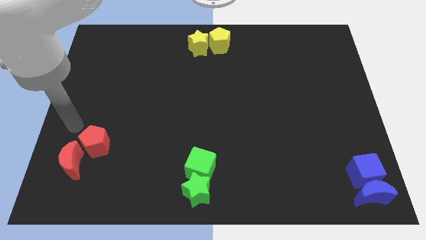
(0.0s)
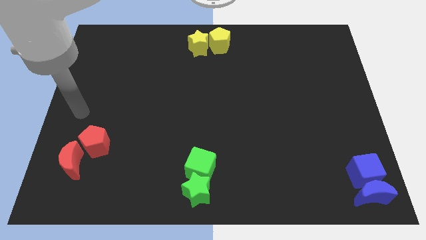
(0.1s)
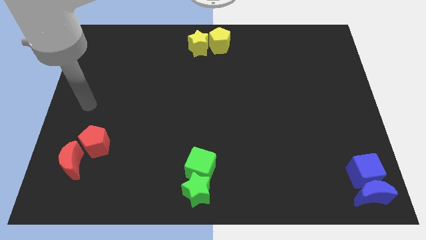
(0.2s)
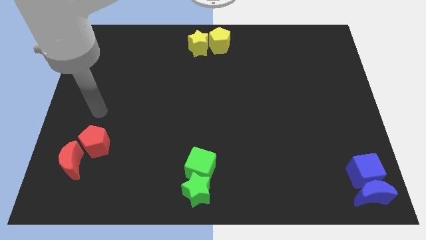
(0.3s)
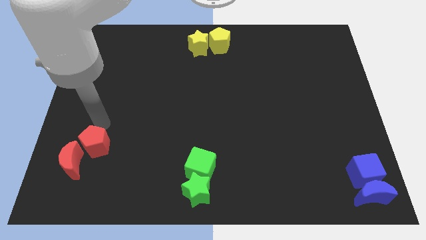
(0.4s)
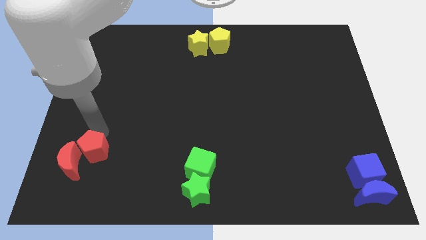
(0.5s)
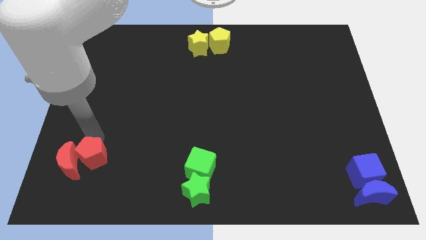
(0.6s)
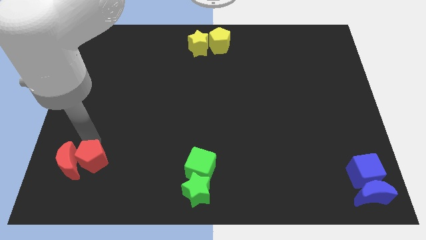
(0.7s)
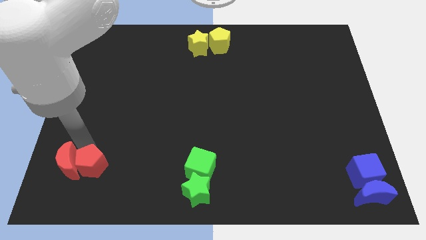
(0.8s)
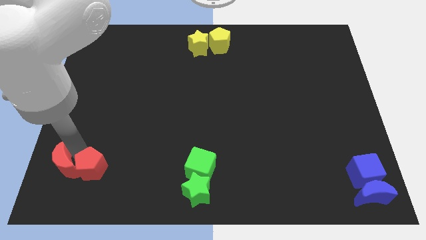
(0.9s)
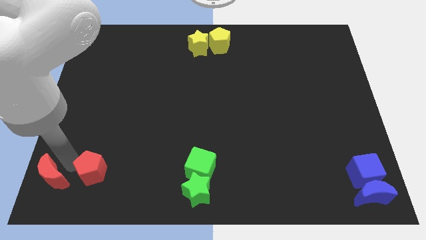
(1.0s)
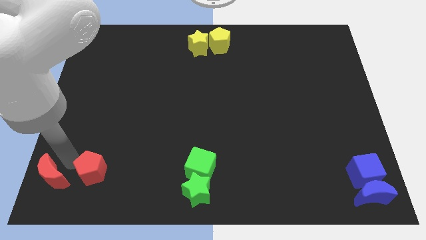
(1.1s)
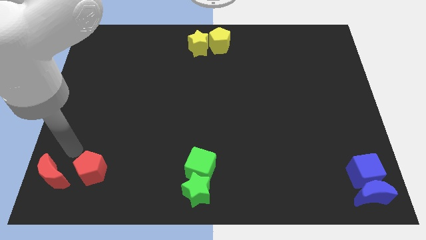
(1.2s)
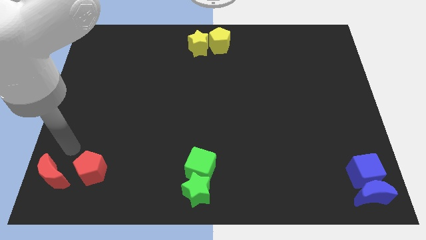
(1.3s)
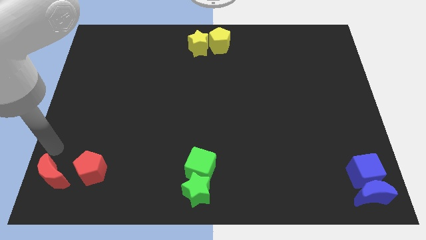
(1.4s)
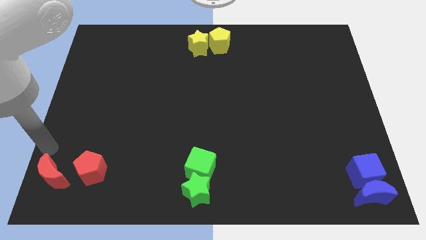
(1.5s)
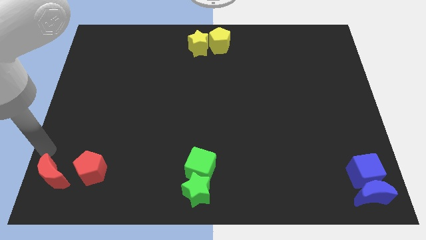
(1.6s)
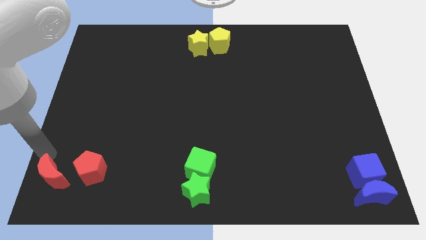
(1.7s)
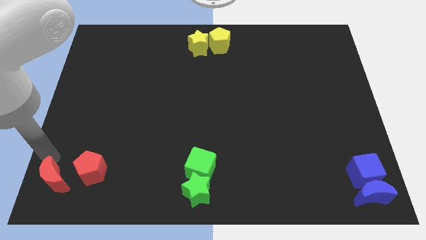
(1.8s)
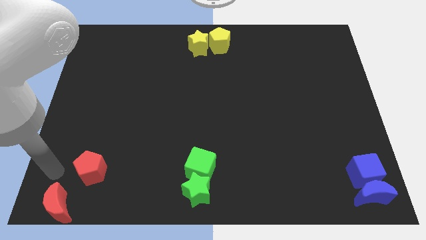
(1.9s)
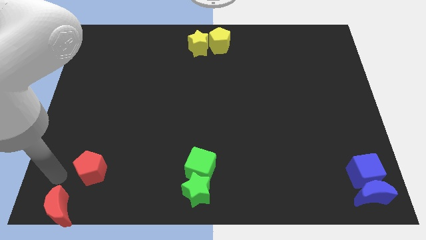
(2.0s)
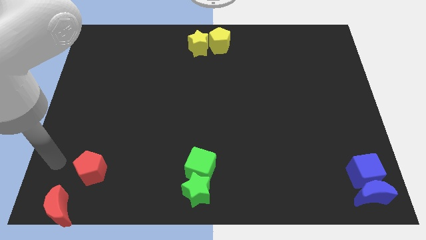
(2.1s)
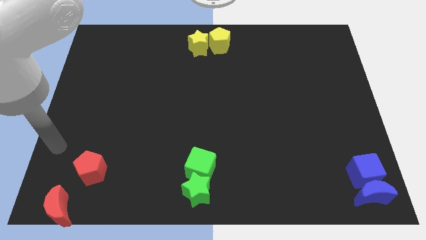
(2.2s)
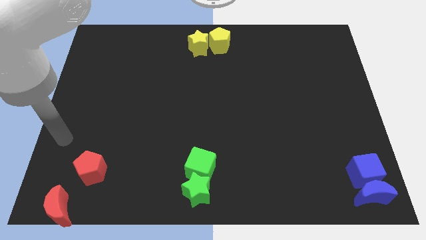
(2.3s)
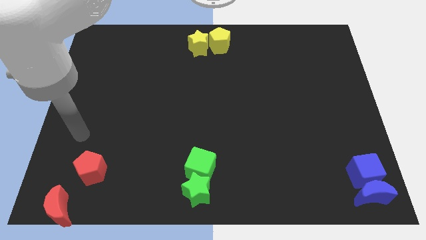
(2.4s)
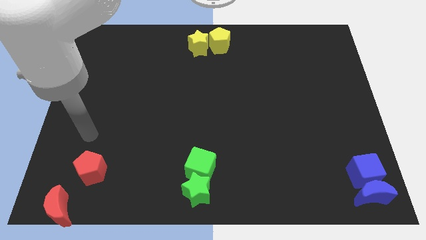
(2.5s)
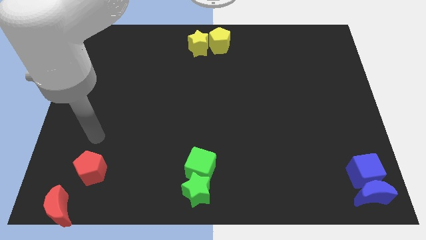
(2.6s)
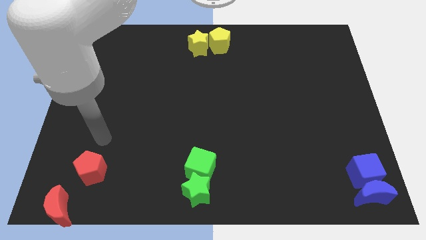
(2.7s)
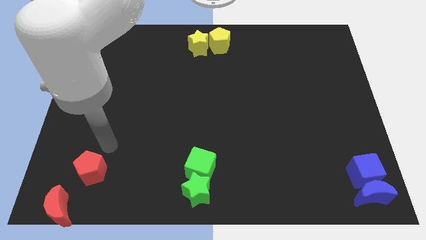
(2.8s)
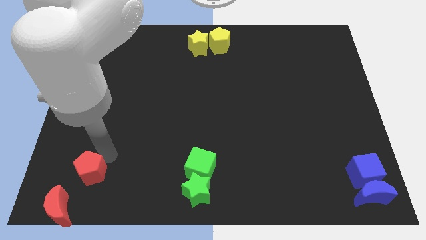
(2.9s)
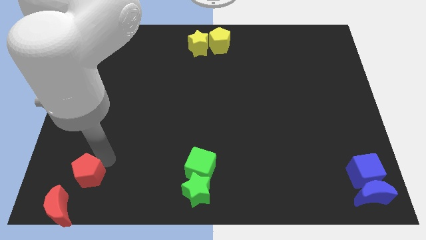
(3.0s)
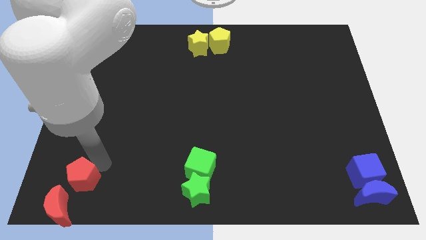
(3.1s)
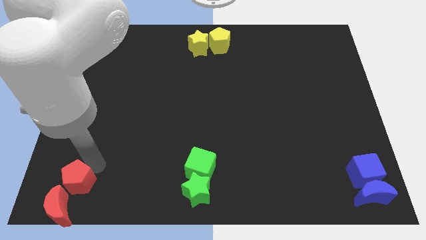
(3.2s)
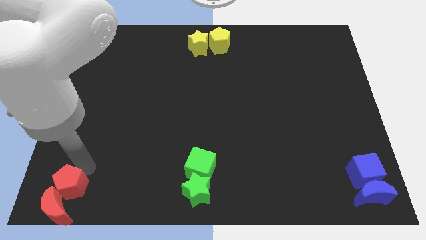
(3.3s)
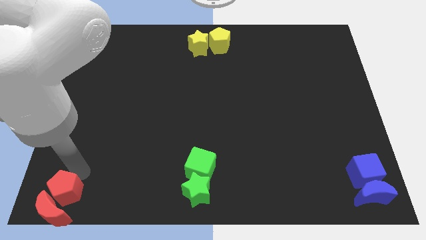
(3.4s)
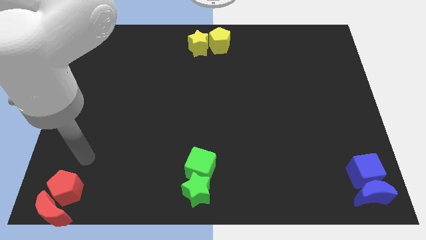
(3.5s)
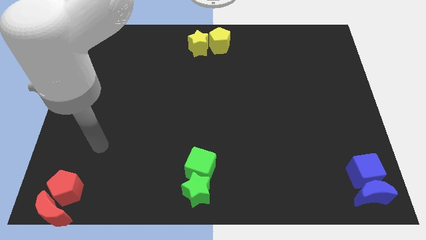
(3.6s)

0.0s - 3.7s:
place the red blocks at the bottom left side

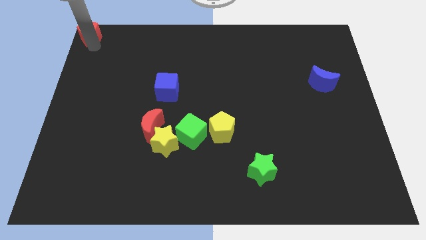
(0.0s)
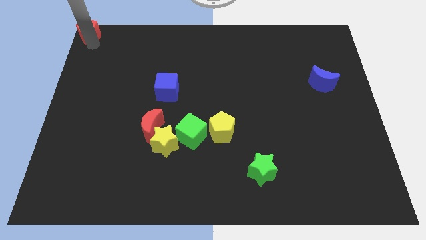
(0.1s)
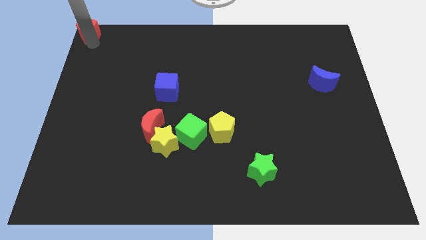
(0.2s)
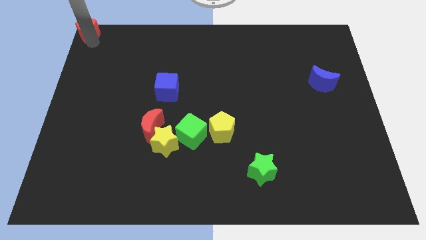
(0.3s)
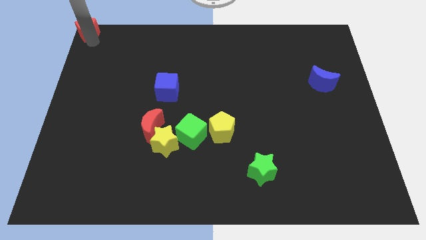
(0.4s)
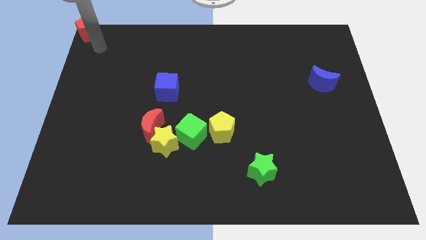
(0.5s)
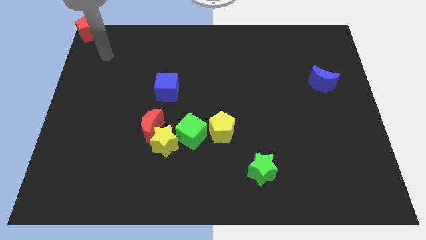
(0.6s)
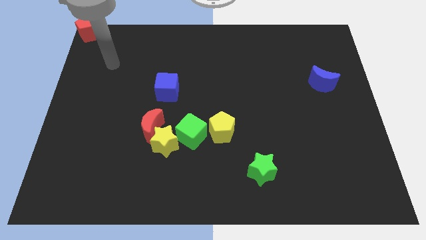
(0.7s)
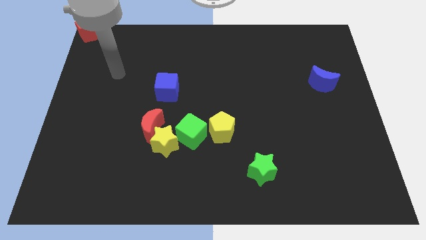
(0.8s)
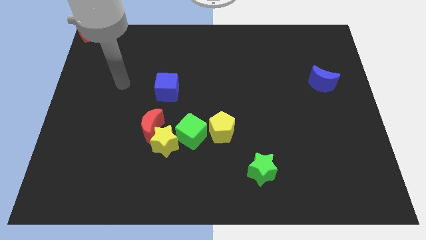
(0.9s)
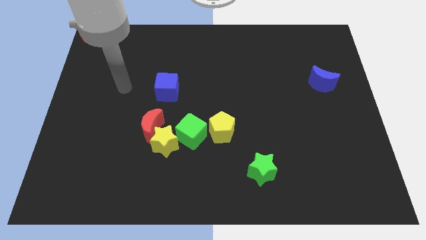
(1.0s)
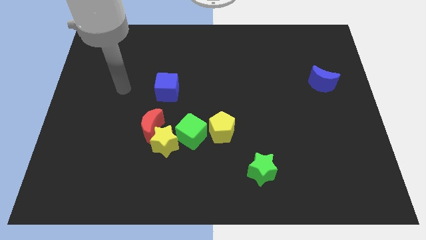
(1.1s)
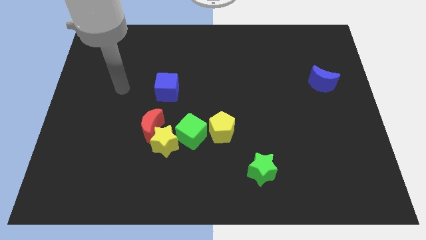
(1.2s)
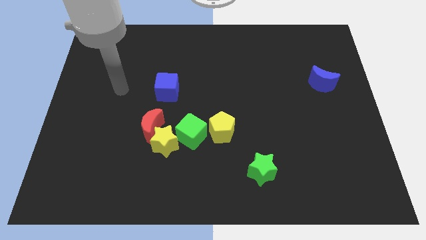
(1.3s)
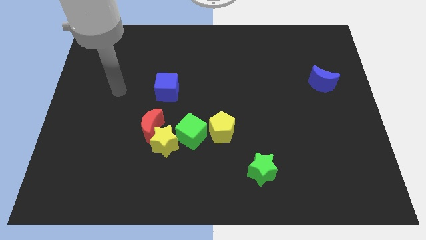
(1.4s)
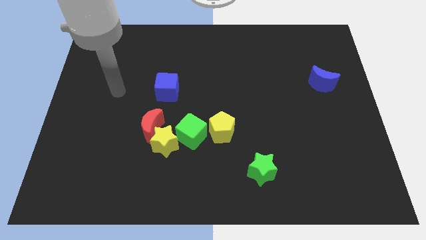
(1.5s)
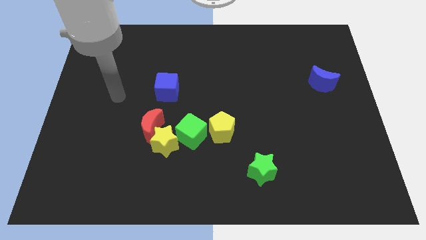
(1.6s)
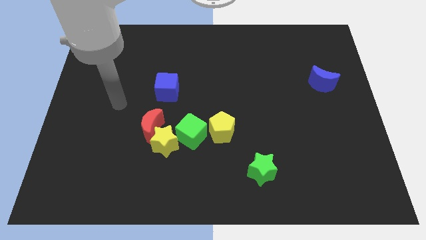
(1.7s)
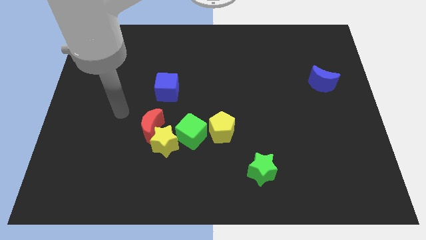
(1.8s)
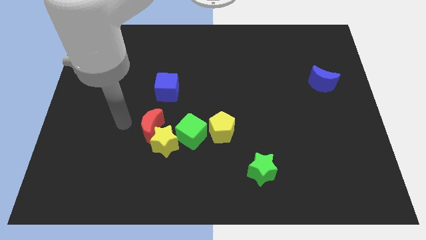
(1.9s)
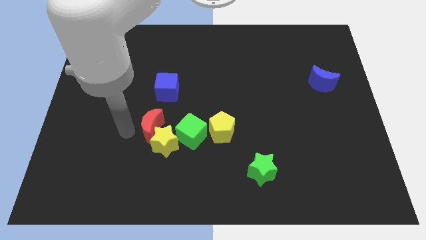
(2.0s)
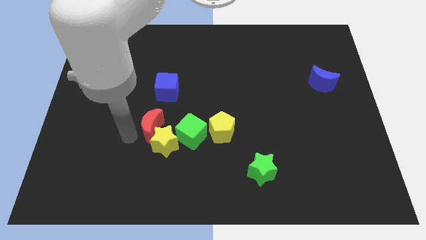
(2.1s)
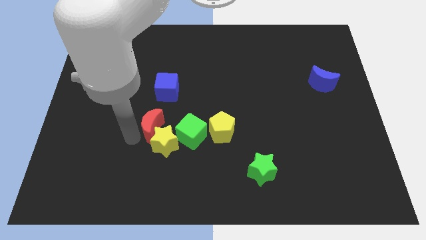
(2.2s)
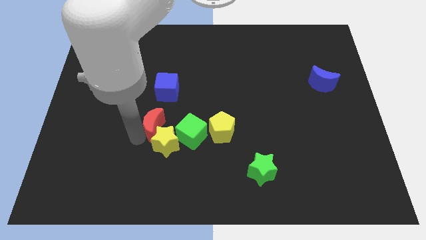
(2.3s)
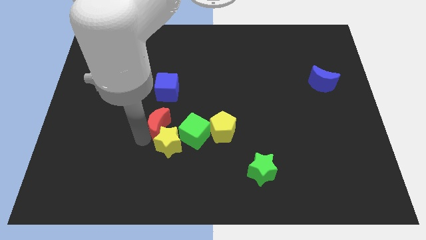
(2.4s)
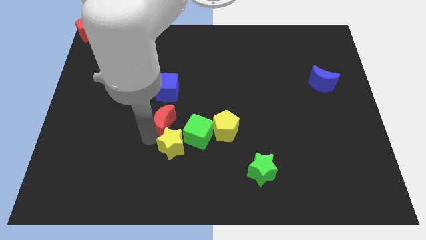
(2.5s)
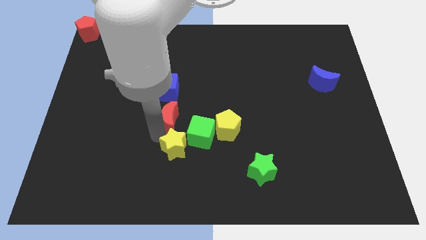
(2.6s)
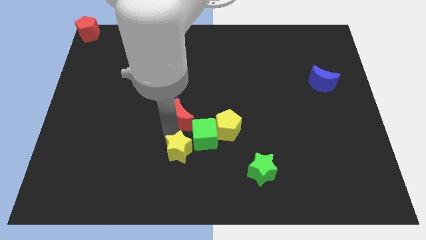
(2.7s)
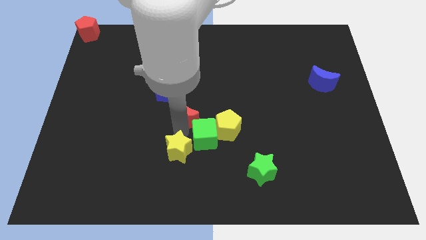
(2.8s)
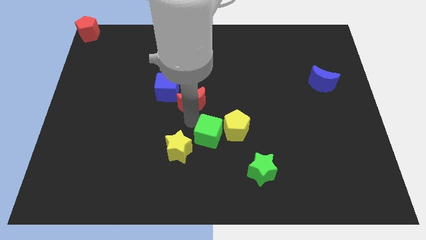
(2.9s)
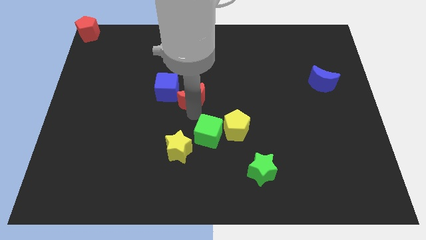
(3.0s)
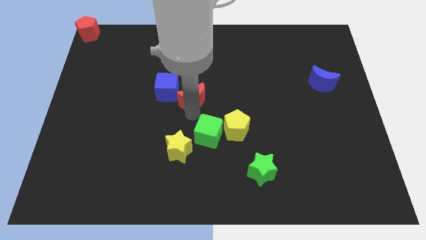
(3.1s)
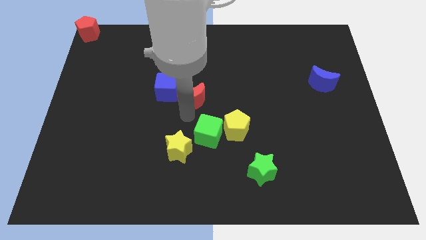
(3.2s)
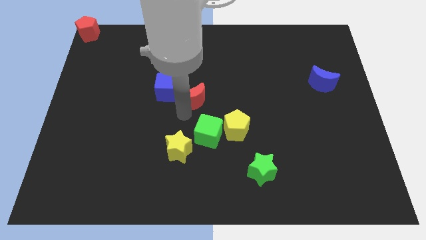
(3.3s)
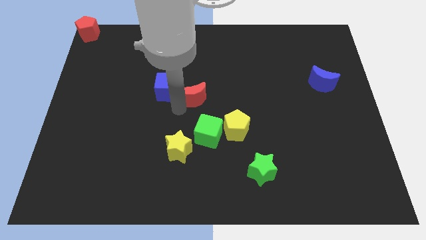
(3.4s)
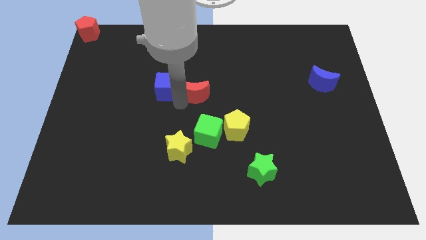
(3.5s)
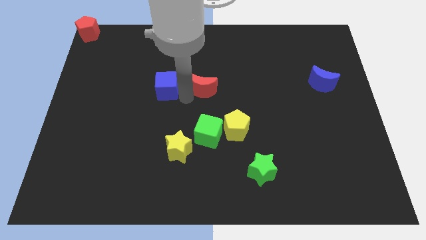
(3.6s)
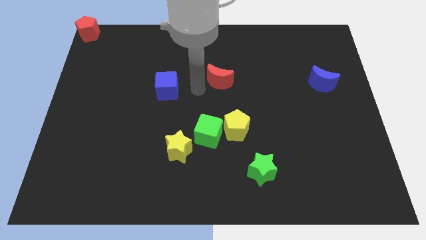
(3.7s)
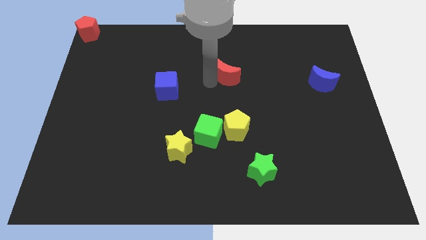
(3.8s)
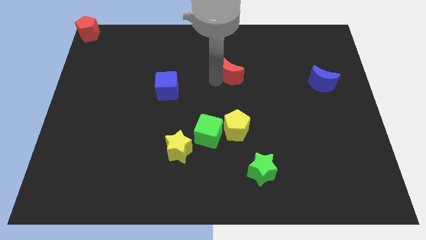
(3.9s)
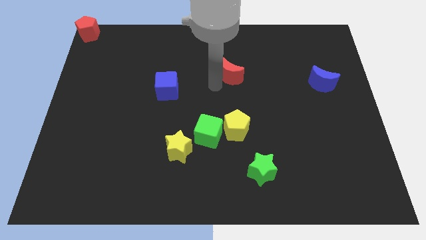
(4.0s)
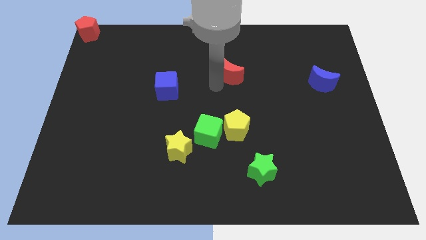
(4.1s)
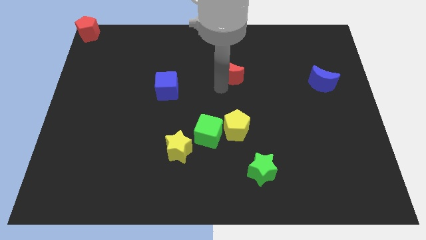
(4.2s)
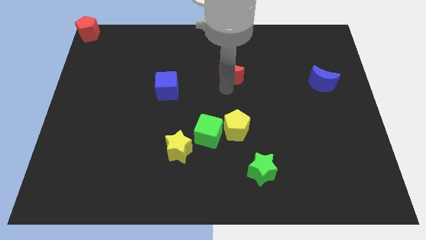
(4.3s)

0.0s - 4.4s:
move red crescent to the middle of the board

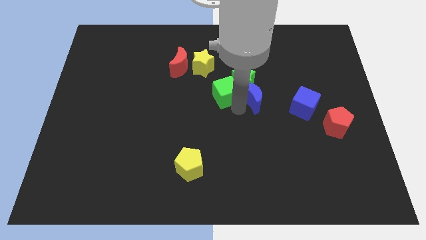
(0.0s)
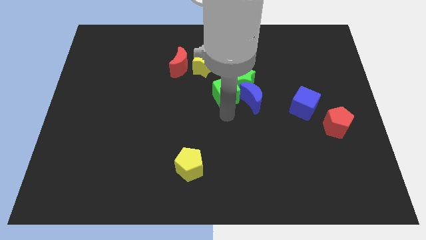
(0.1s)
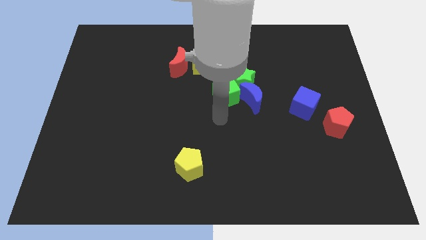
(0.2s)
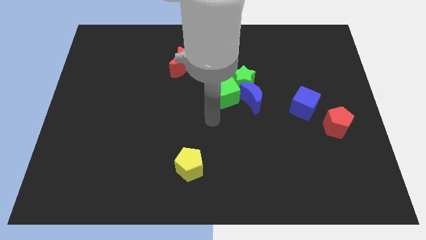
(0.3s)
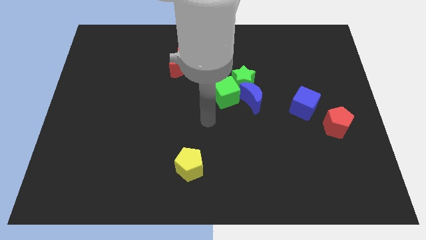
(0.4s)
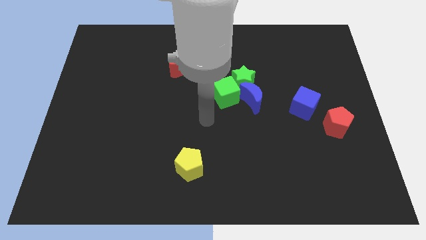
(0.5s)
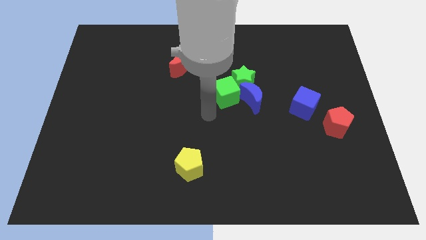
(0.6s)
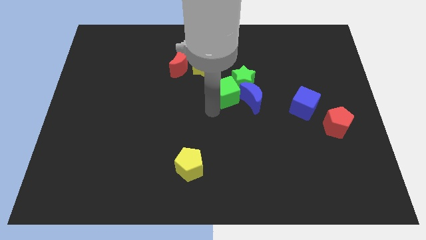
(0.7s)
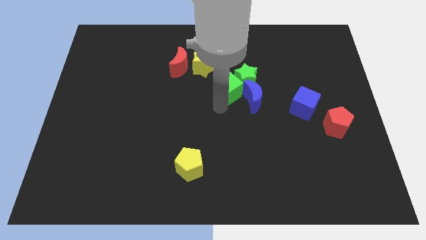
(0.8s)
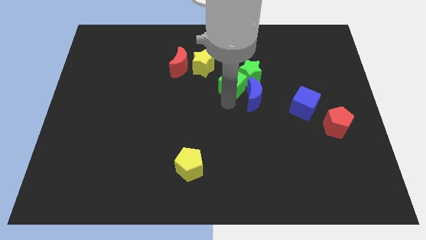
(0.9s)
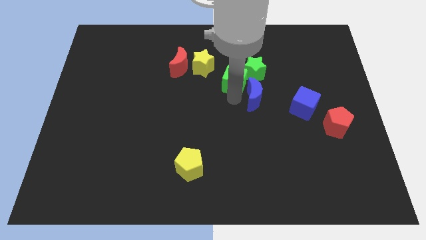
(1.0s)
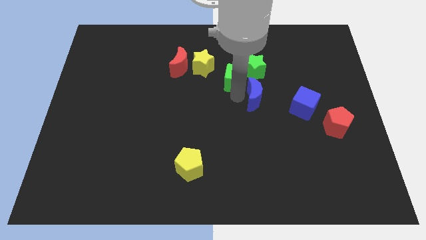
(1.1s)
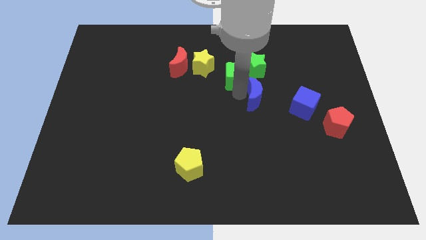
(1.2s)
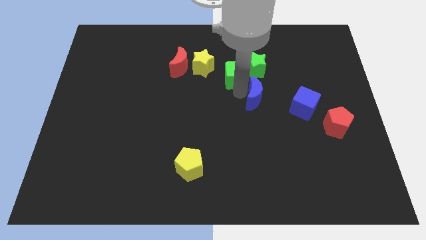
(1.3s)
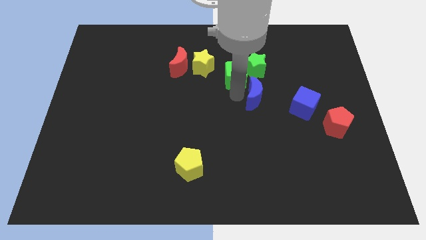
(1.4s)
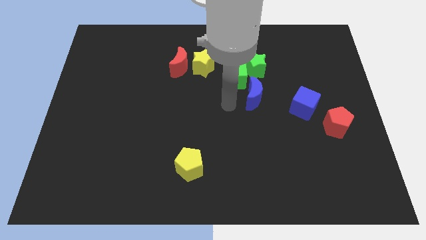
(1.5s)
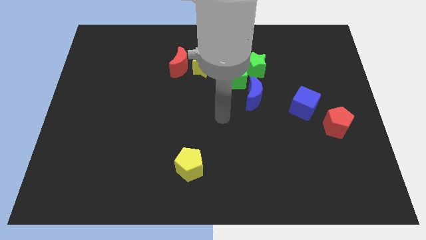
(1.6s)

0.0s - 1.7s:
push the green star with the green cube
